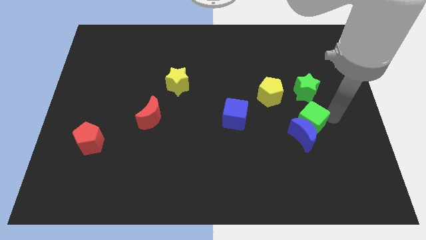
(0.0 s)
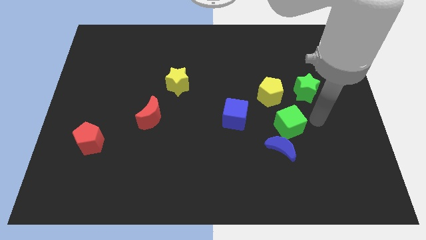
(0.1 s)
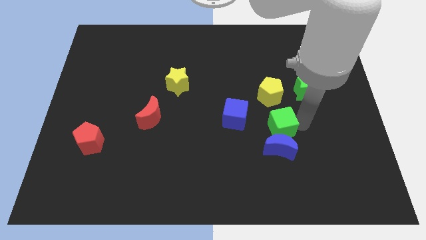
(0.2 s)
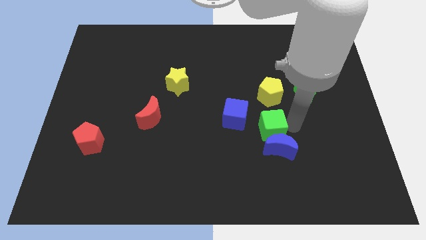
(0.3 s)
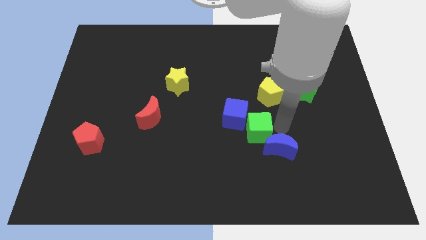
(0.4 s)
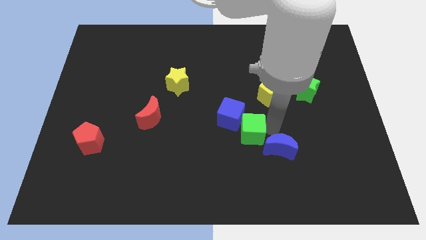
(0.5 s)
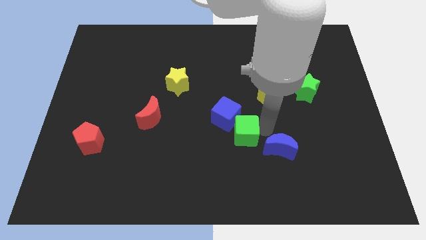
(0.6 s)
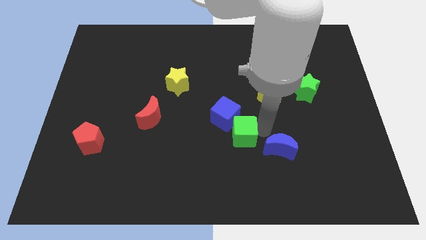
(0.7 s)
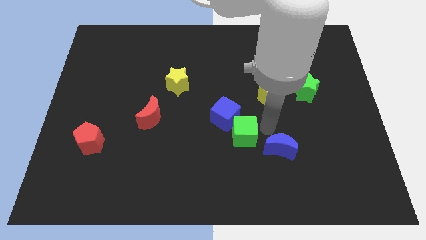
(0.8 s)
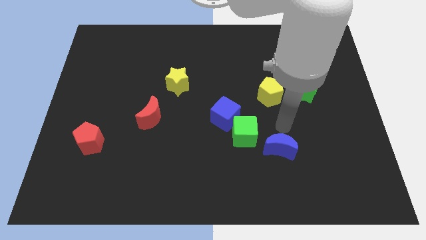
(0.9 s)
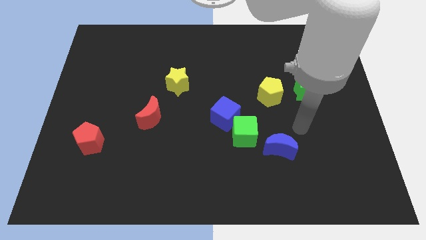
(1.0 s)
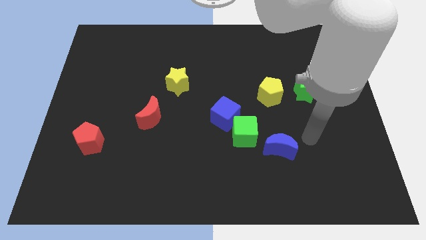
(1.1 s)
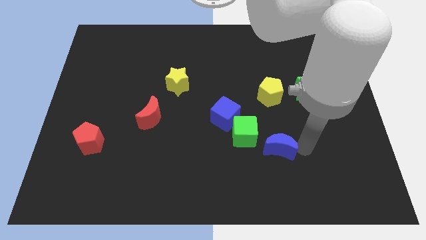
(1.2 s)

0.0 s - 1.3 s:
slide the green cube into the blue cube

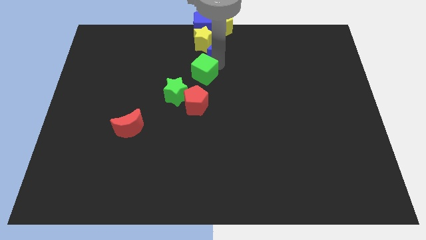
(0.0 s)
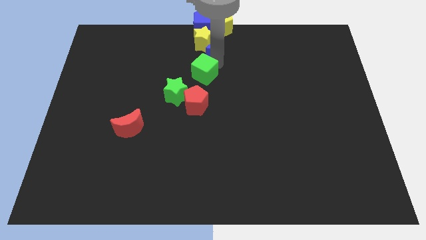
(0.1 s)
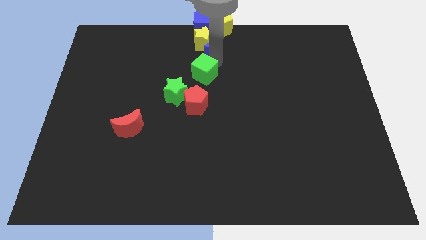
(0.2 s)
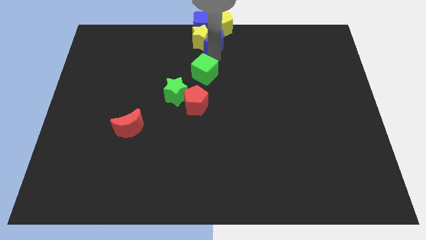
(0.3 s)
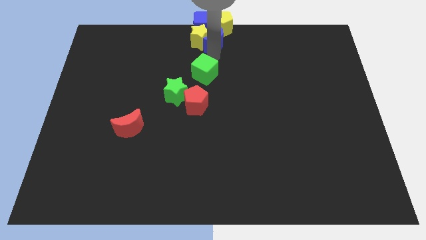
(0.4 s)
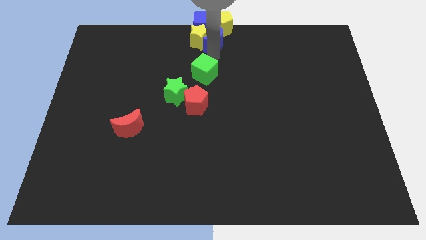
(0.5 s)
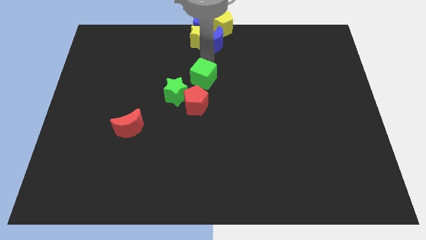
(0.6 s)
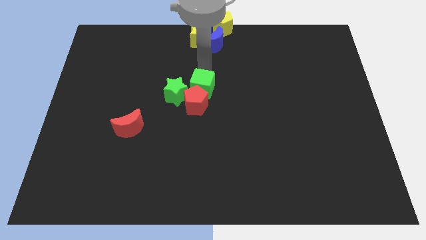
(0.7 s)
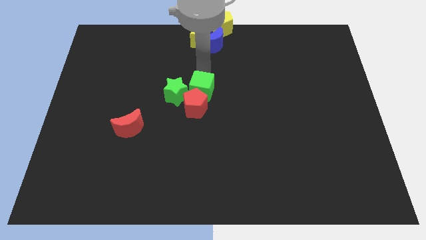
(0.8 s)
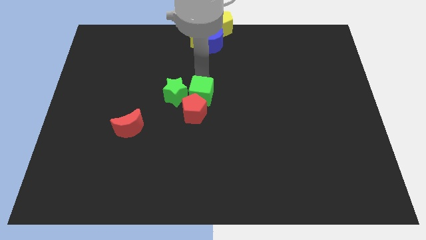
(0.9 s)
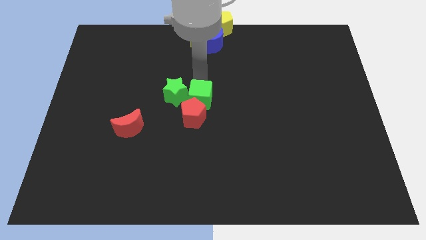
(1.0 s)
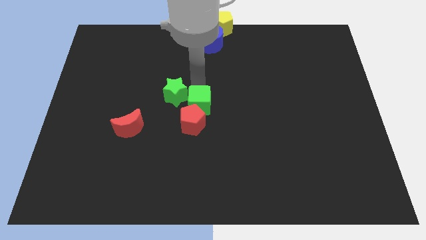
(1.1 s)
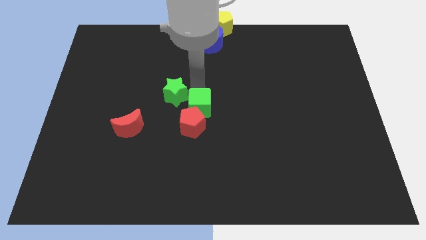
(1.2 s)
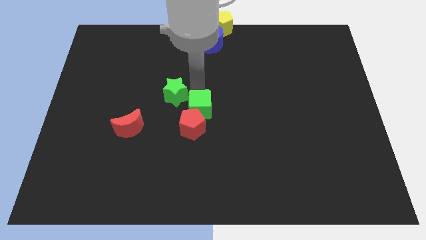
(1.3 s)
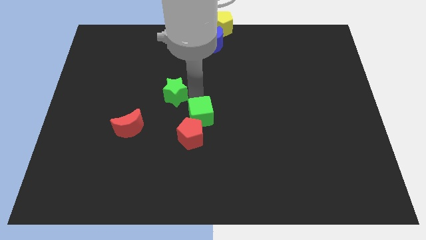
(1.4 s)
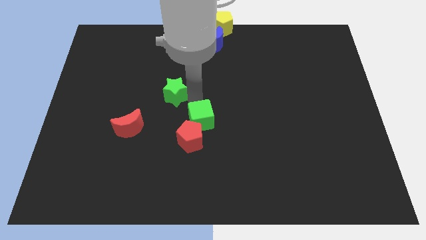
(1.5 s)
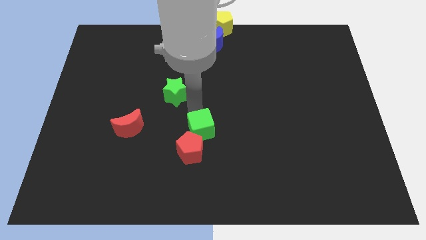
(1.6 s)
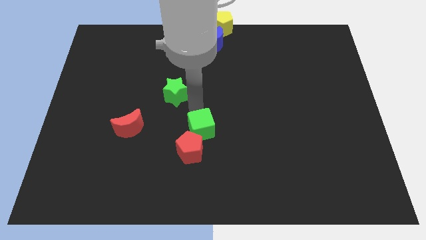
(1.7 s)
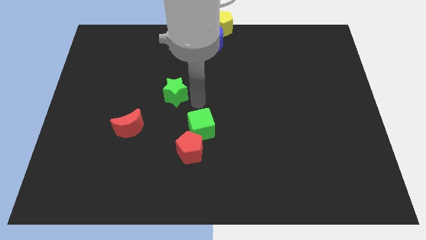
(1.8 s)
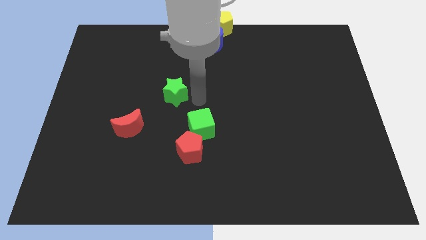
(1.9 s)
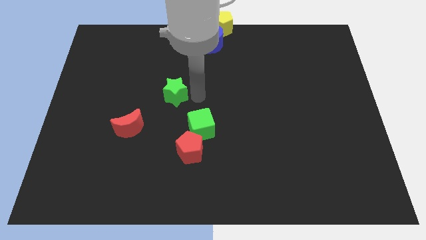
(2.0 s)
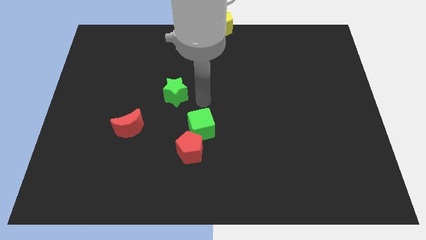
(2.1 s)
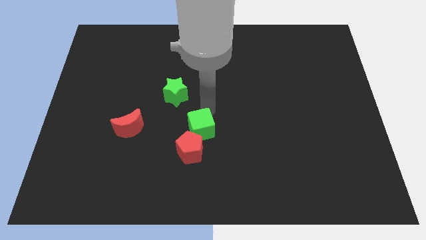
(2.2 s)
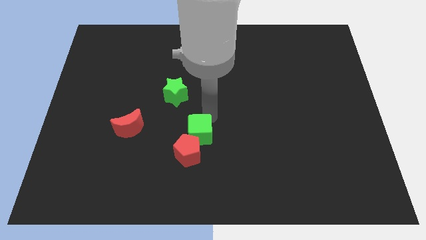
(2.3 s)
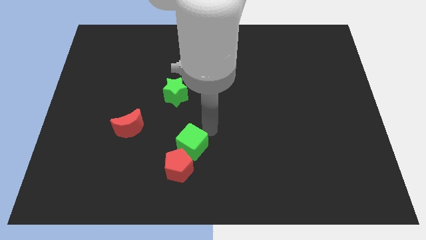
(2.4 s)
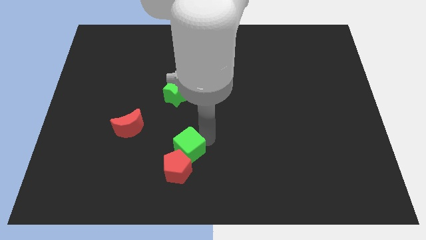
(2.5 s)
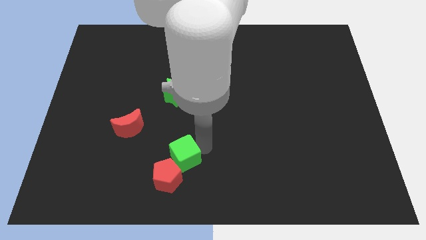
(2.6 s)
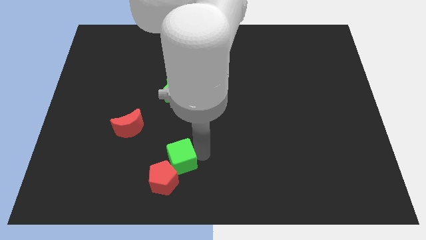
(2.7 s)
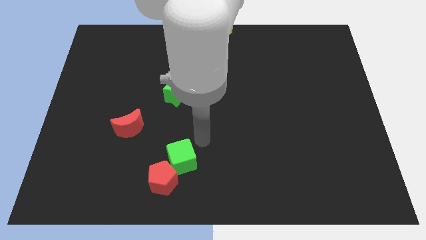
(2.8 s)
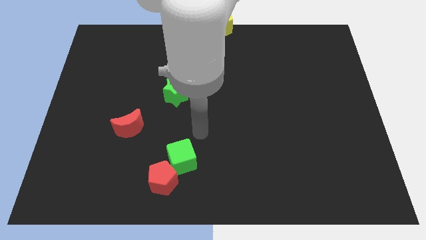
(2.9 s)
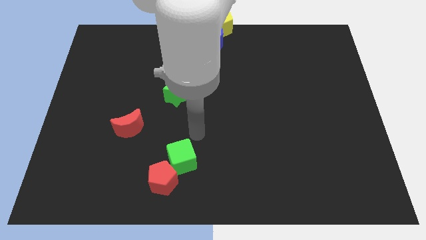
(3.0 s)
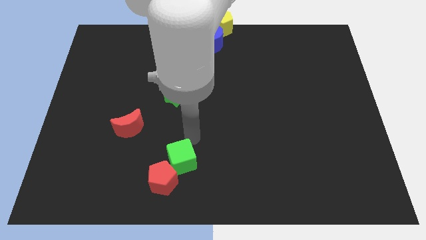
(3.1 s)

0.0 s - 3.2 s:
push the green cube and the red pentagon towards the bottom center

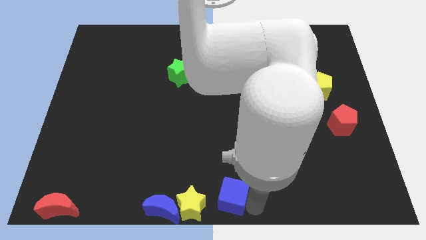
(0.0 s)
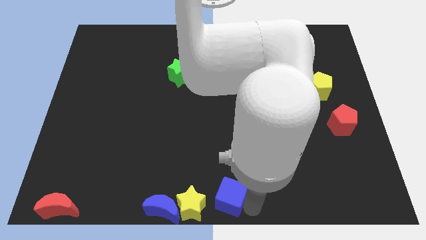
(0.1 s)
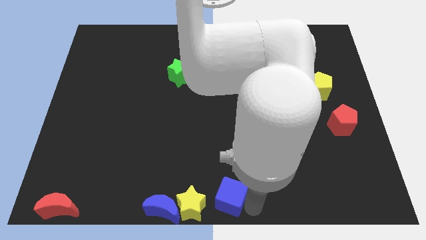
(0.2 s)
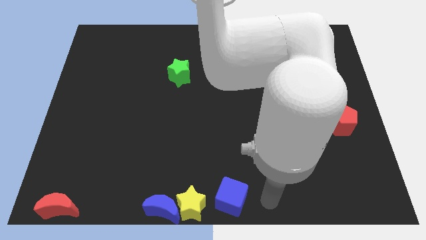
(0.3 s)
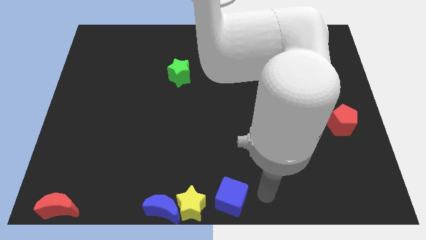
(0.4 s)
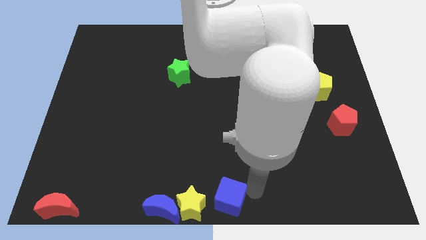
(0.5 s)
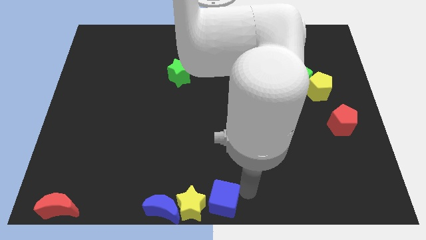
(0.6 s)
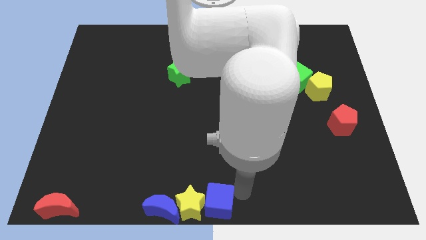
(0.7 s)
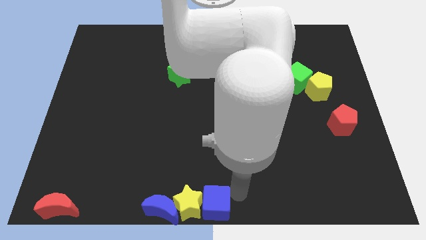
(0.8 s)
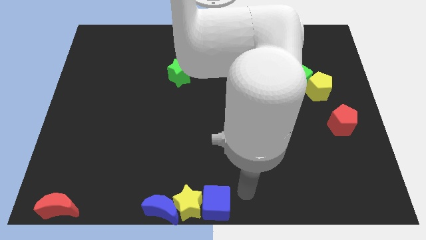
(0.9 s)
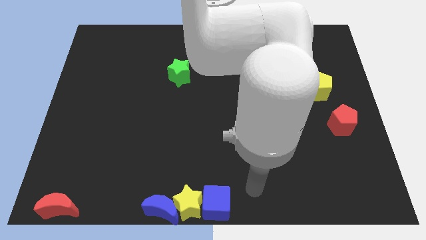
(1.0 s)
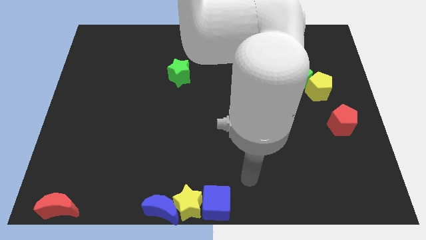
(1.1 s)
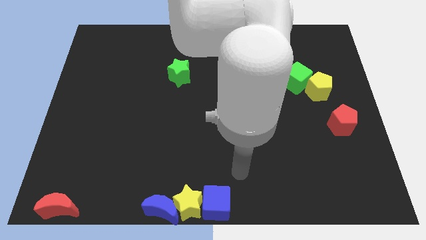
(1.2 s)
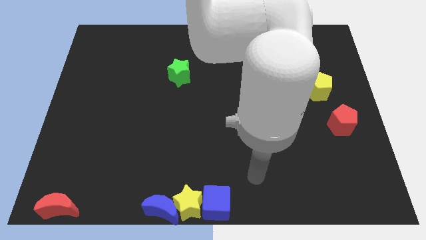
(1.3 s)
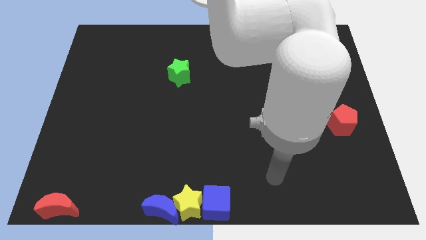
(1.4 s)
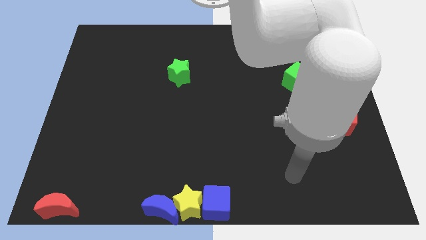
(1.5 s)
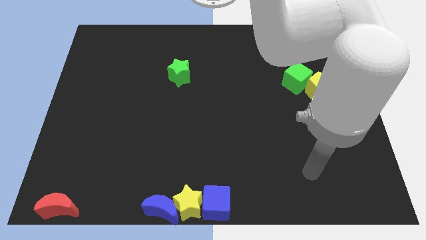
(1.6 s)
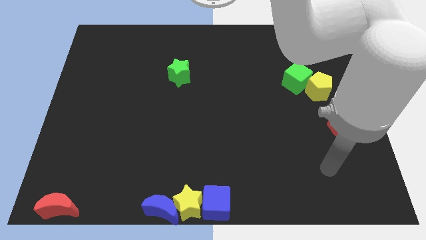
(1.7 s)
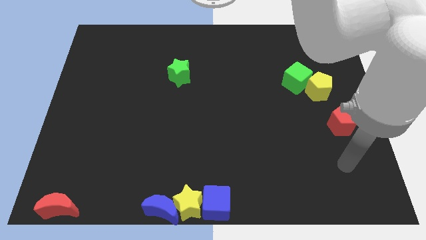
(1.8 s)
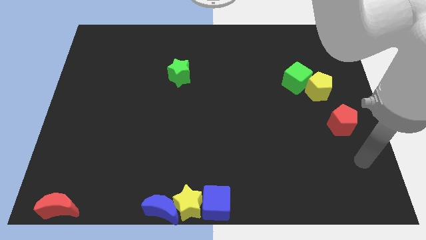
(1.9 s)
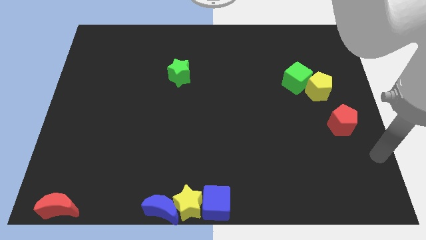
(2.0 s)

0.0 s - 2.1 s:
push the blue cube into the yellow star

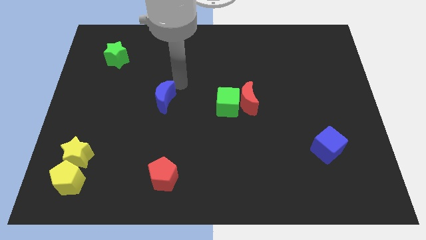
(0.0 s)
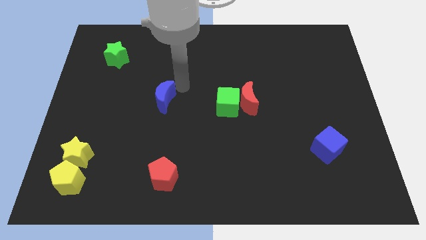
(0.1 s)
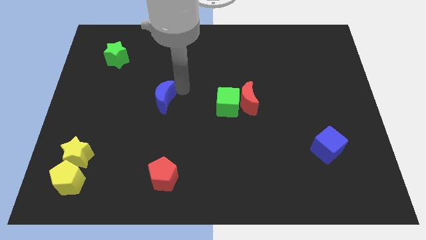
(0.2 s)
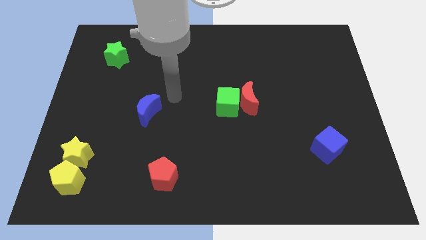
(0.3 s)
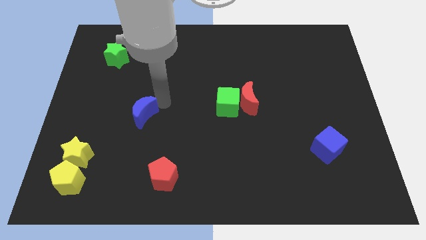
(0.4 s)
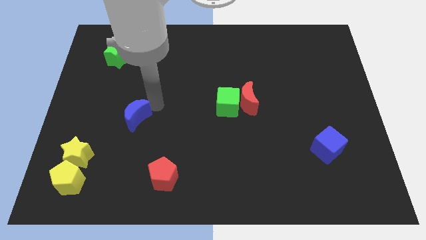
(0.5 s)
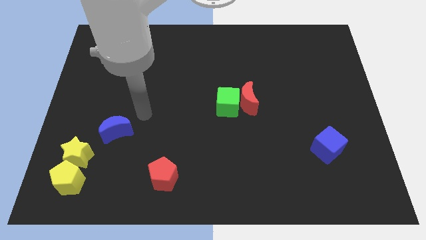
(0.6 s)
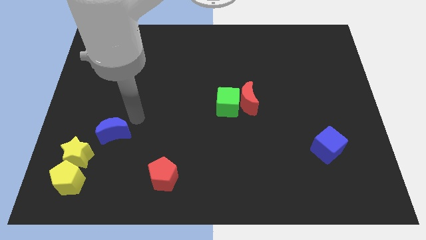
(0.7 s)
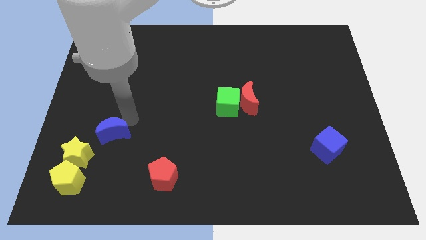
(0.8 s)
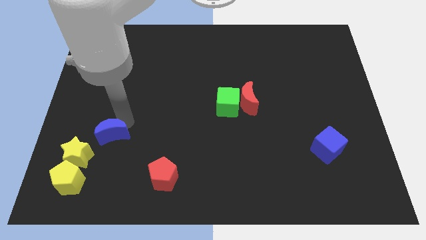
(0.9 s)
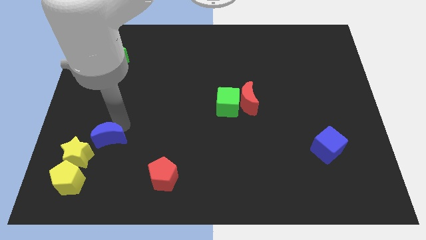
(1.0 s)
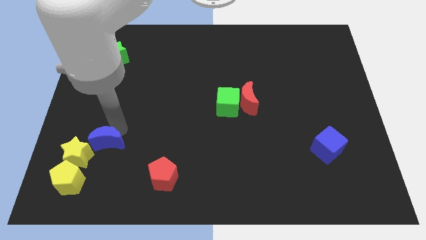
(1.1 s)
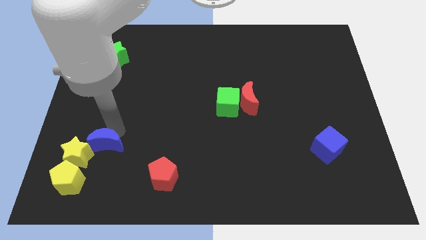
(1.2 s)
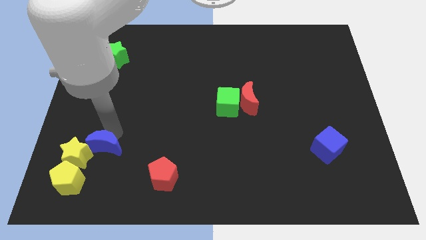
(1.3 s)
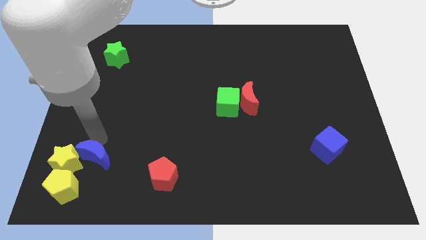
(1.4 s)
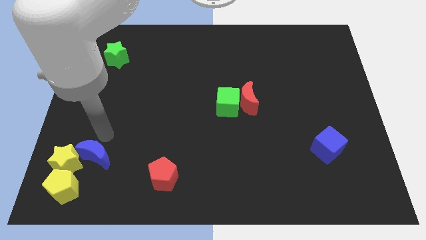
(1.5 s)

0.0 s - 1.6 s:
push the blue crescent towards the right to the yellow star

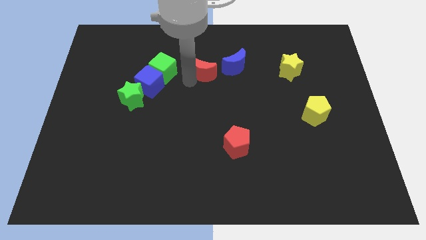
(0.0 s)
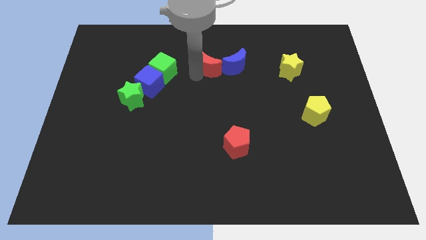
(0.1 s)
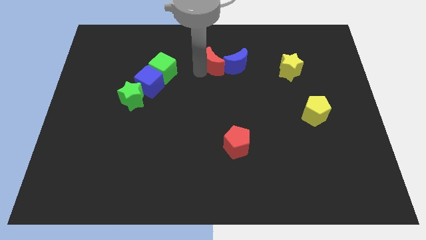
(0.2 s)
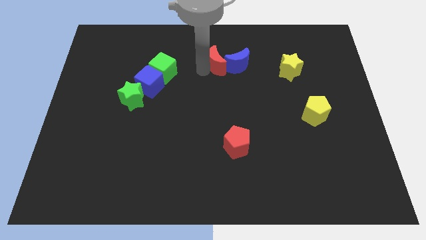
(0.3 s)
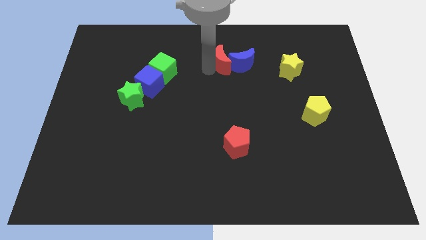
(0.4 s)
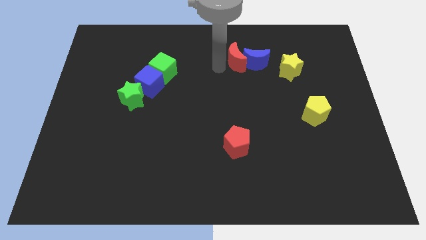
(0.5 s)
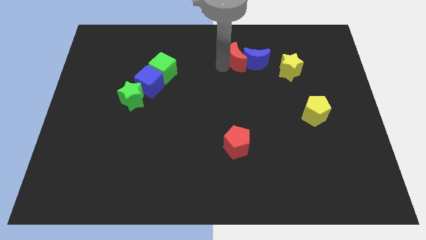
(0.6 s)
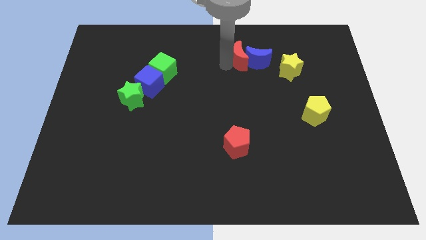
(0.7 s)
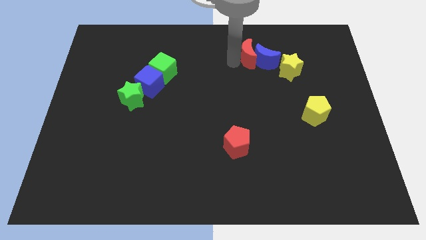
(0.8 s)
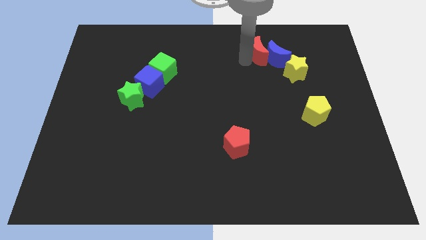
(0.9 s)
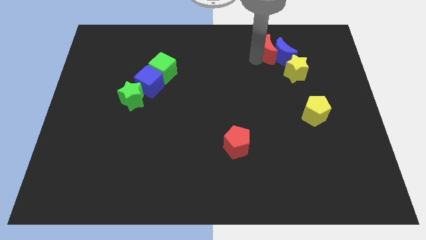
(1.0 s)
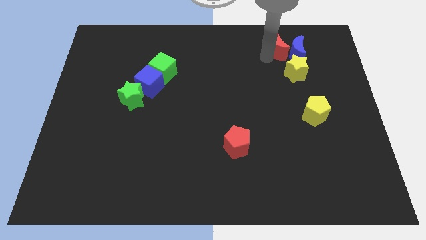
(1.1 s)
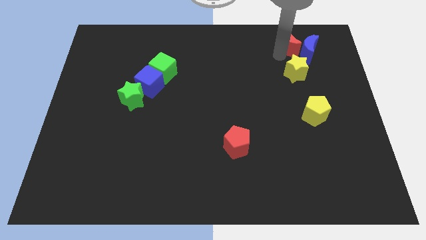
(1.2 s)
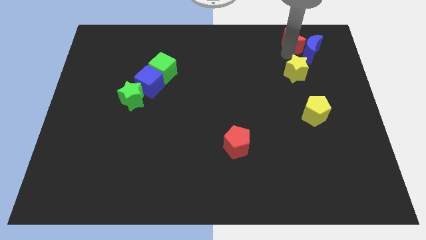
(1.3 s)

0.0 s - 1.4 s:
push the red crescent and blue moon above the yellow star
